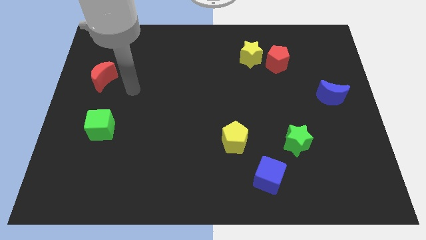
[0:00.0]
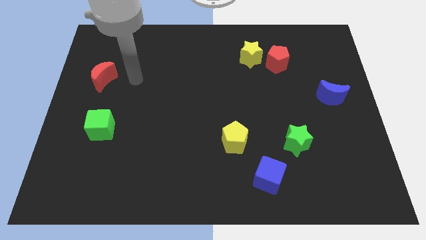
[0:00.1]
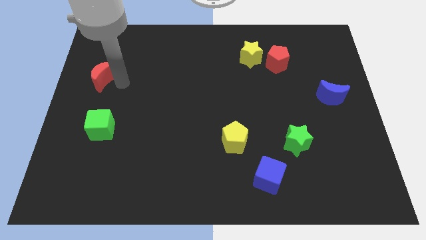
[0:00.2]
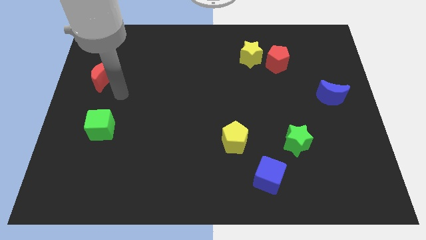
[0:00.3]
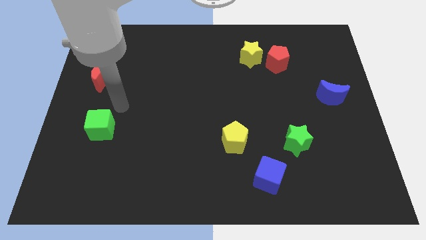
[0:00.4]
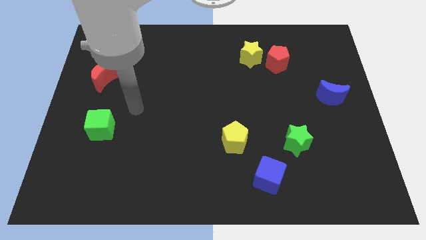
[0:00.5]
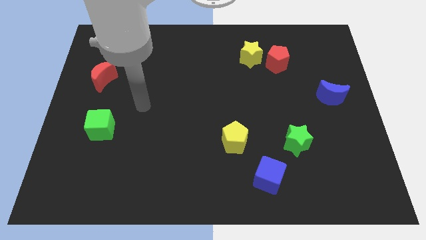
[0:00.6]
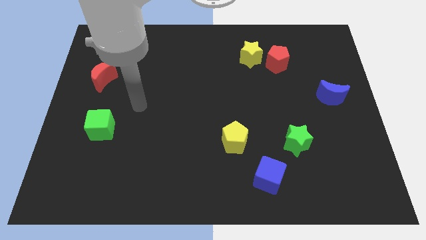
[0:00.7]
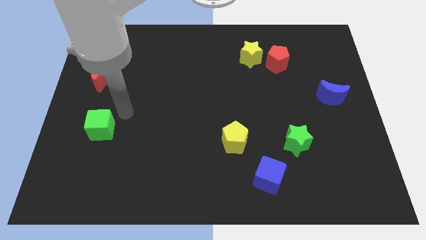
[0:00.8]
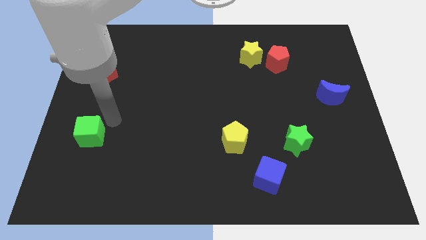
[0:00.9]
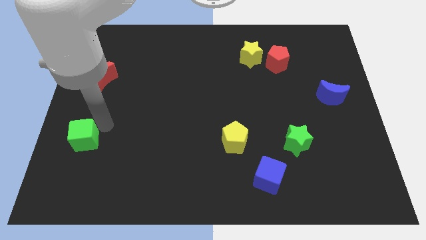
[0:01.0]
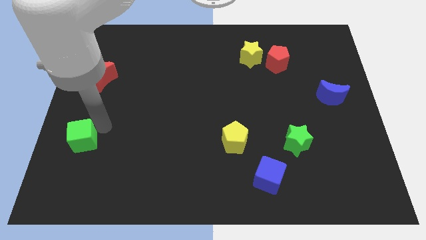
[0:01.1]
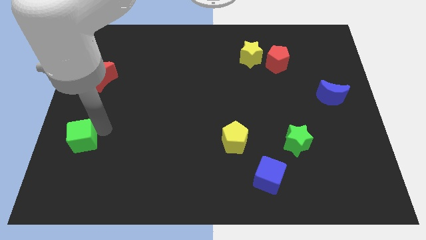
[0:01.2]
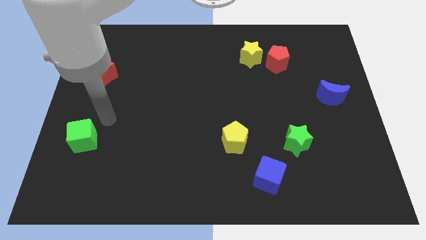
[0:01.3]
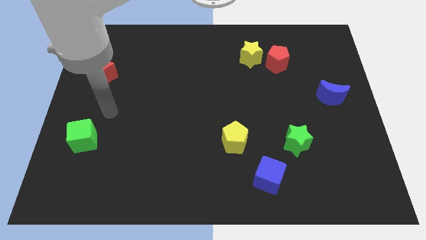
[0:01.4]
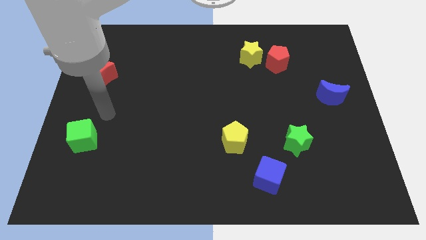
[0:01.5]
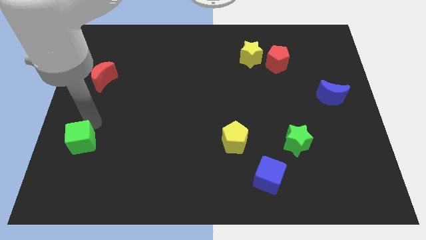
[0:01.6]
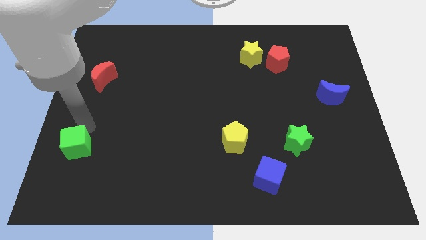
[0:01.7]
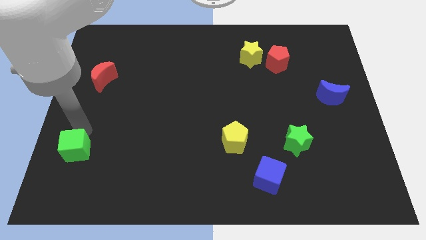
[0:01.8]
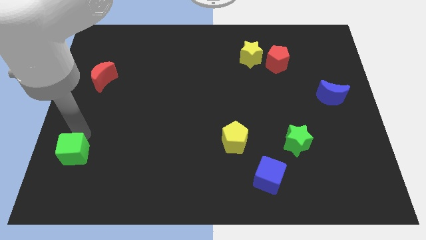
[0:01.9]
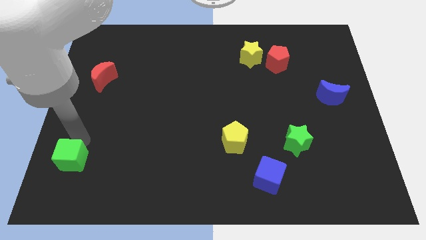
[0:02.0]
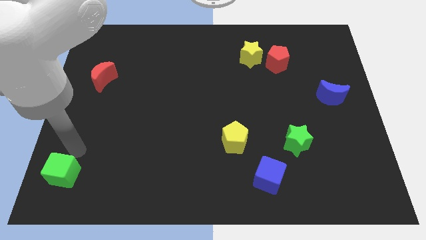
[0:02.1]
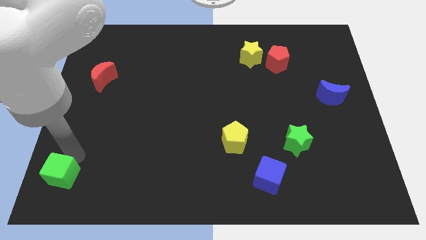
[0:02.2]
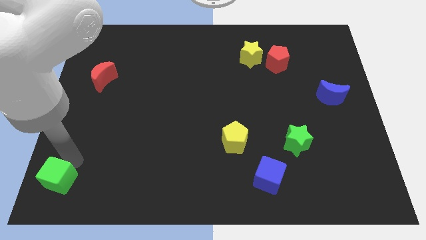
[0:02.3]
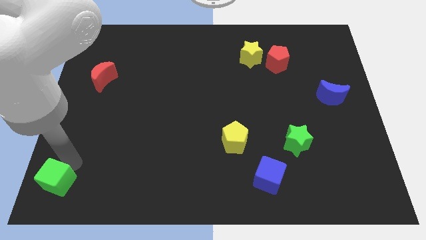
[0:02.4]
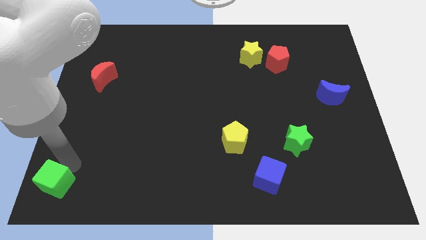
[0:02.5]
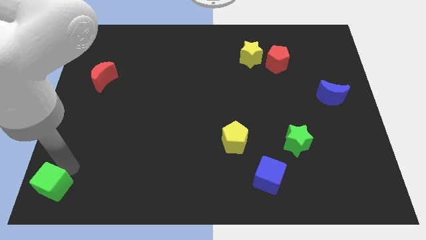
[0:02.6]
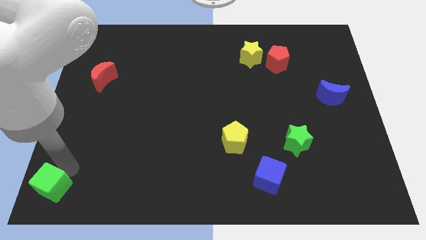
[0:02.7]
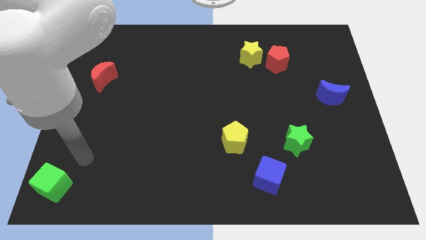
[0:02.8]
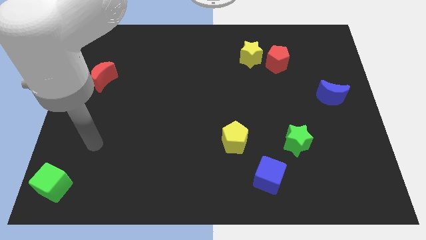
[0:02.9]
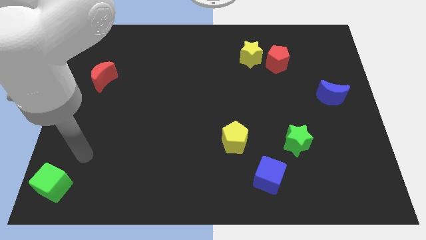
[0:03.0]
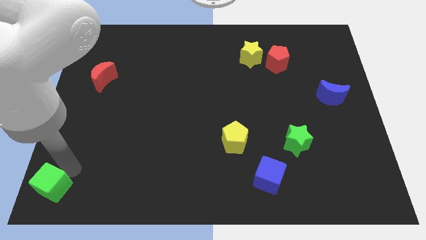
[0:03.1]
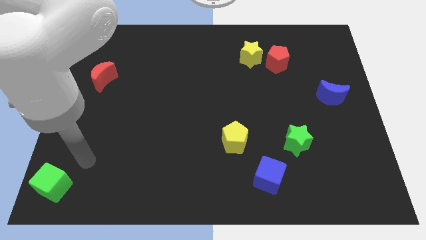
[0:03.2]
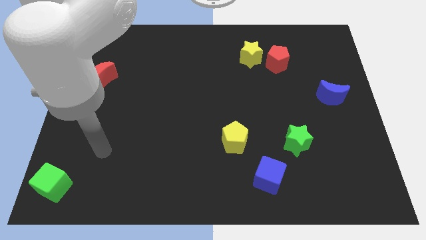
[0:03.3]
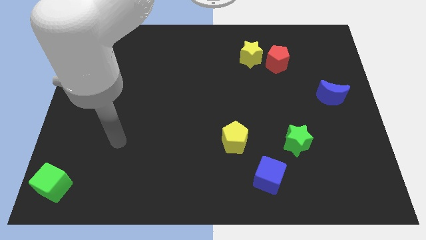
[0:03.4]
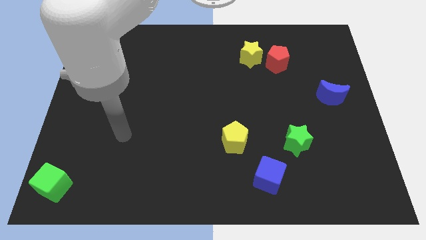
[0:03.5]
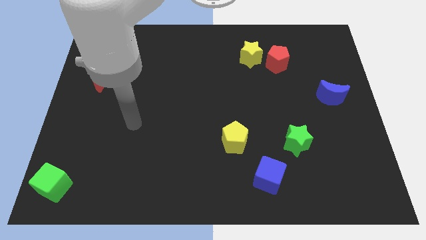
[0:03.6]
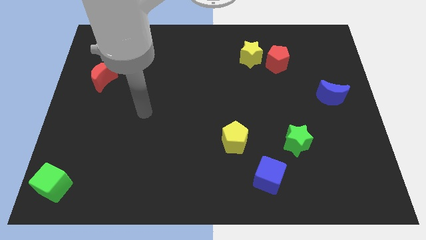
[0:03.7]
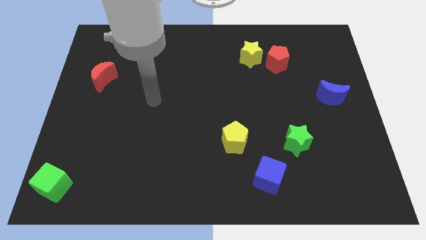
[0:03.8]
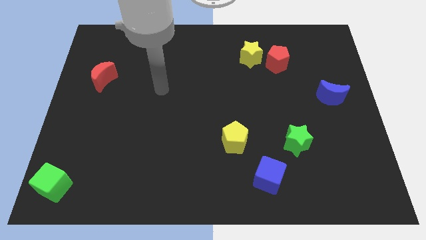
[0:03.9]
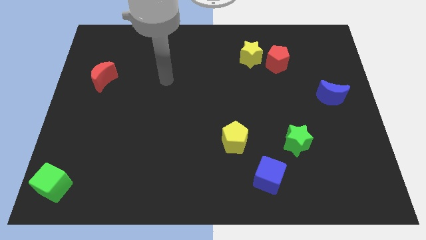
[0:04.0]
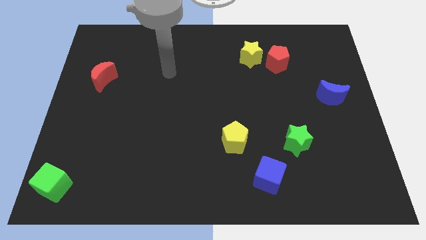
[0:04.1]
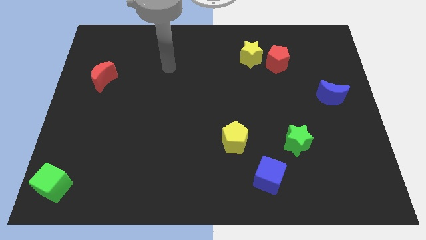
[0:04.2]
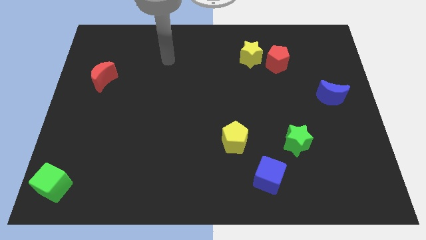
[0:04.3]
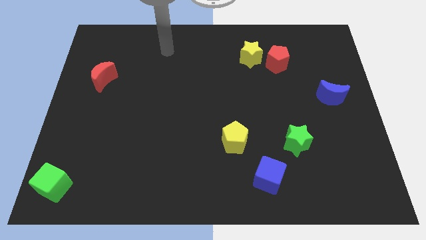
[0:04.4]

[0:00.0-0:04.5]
move the green cube to the bottom left corner

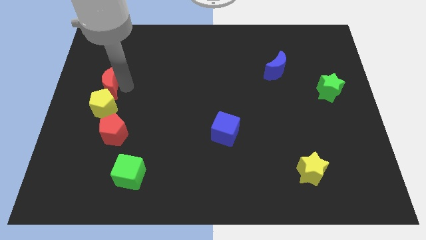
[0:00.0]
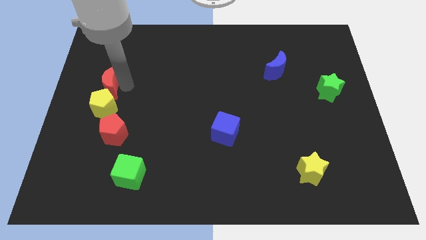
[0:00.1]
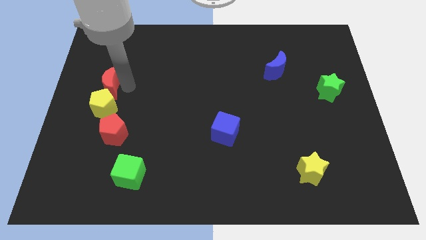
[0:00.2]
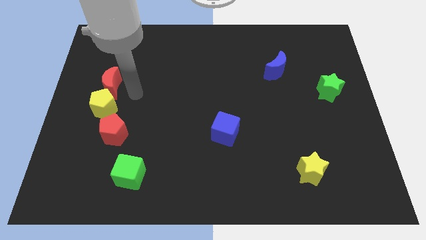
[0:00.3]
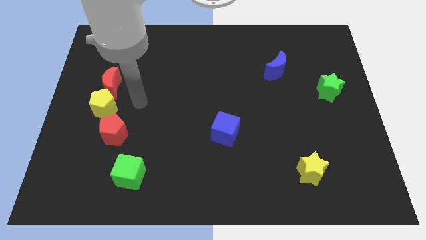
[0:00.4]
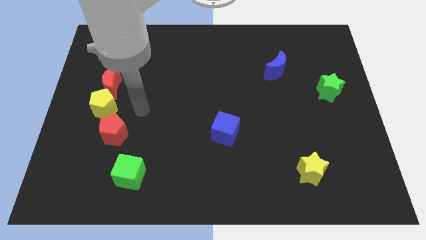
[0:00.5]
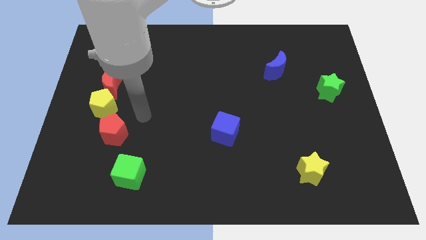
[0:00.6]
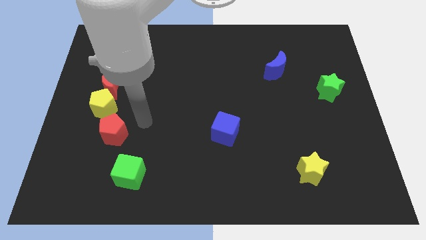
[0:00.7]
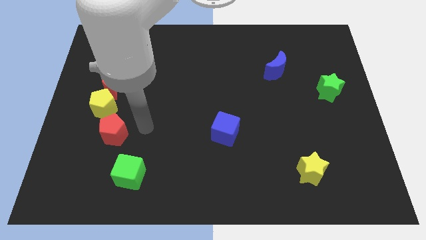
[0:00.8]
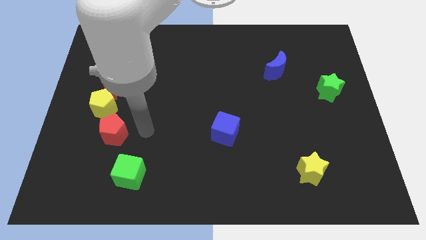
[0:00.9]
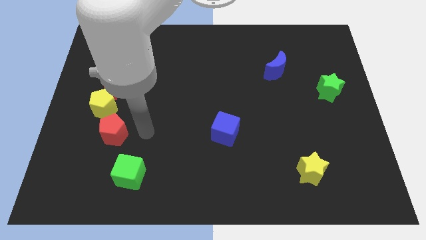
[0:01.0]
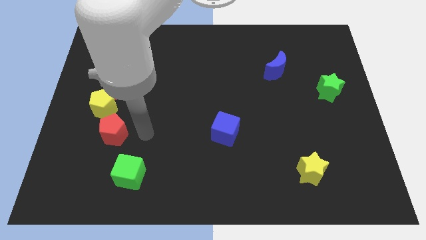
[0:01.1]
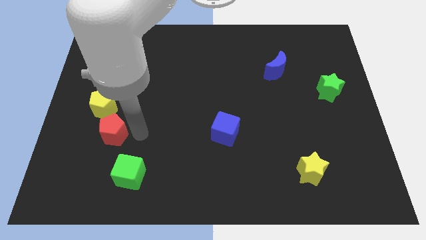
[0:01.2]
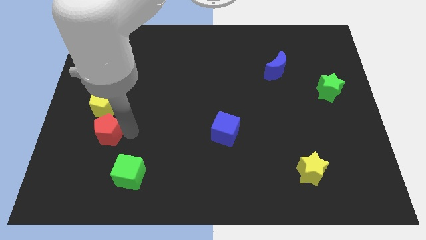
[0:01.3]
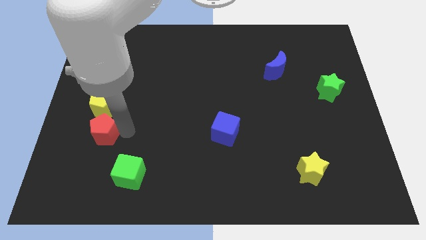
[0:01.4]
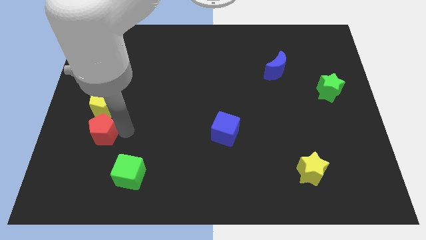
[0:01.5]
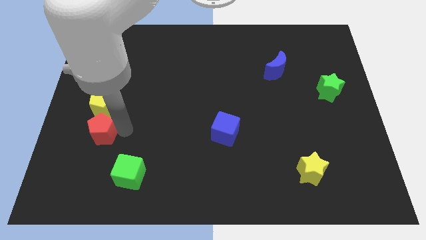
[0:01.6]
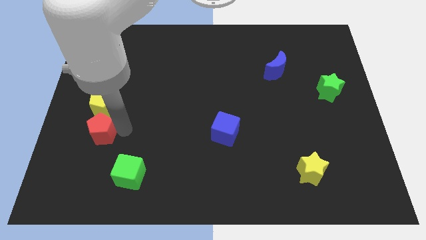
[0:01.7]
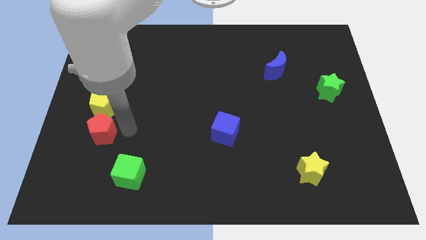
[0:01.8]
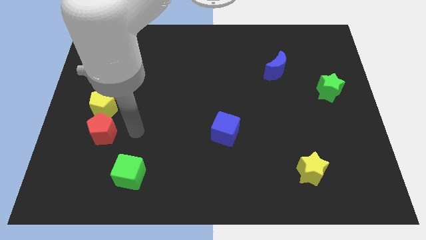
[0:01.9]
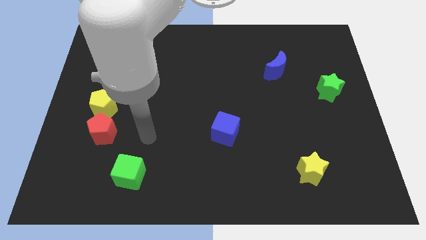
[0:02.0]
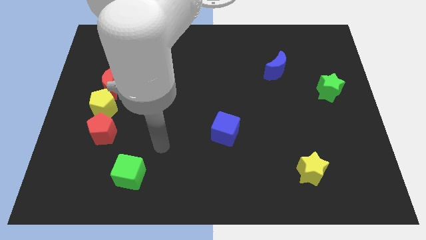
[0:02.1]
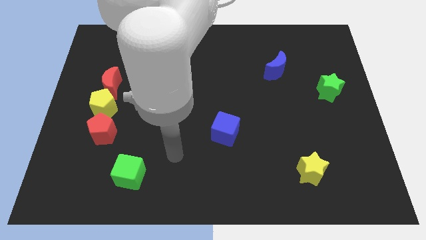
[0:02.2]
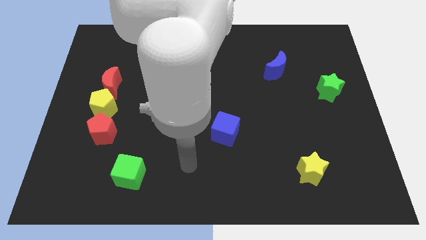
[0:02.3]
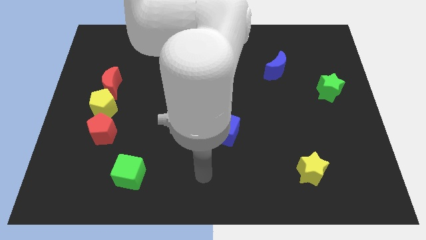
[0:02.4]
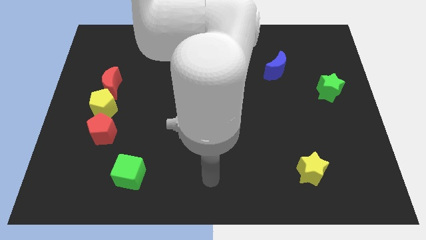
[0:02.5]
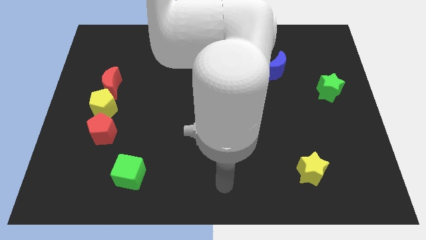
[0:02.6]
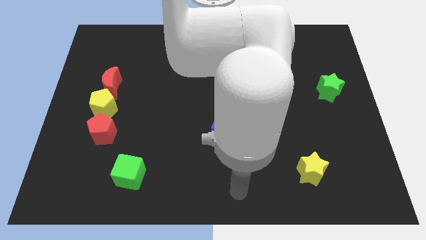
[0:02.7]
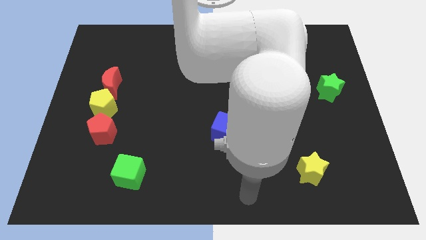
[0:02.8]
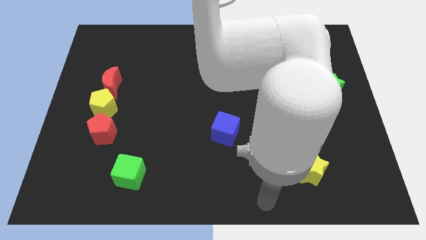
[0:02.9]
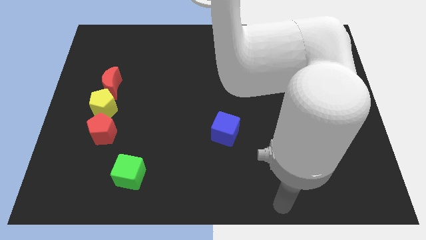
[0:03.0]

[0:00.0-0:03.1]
move the red pentagon slightly towards the bottom of the yellow pentagon

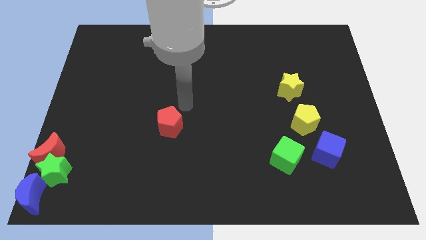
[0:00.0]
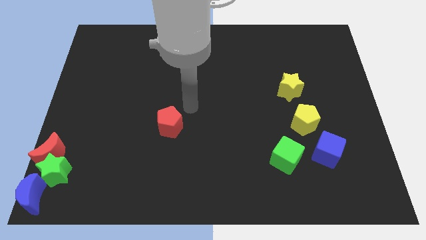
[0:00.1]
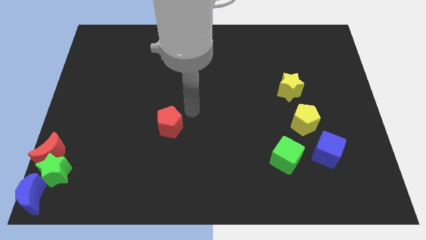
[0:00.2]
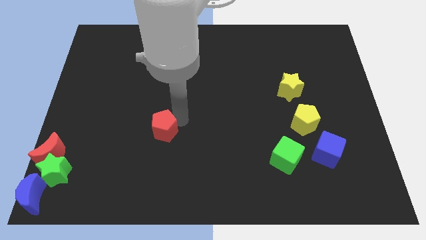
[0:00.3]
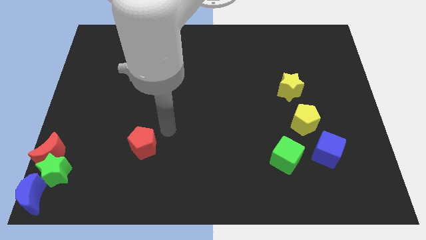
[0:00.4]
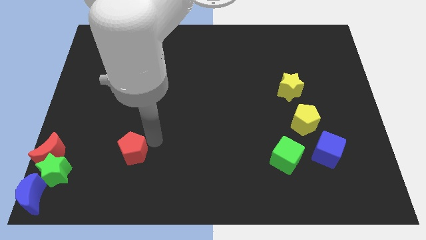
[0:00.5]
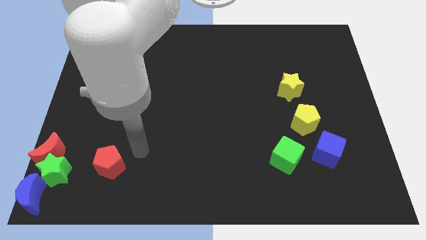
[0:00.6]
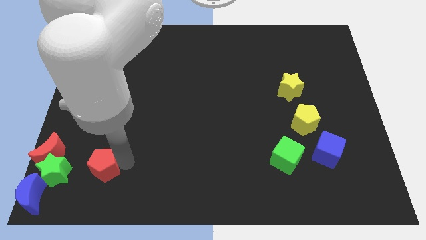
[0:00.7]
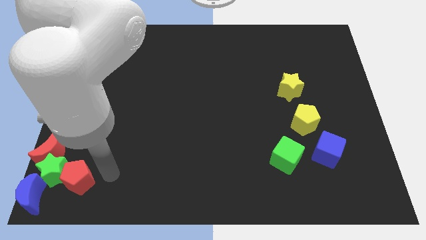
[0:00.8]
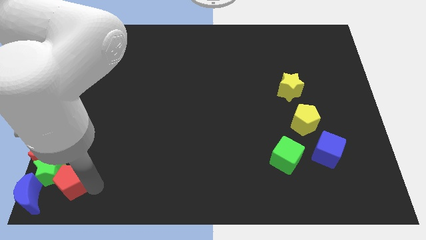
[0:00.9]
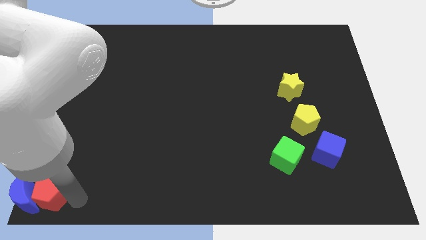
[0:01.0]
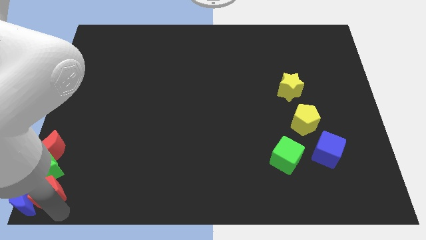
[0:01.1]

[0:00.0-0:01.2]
push red pentagon to the bottom left

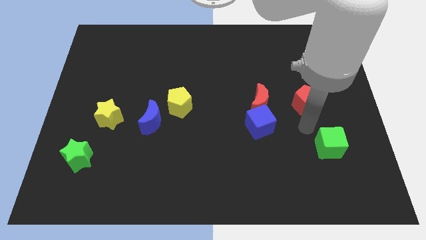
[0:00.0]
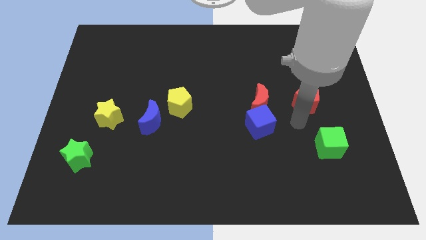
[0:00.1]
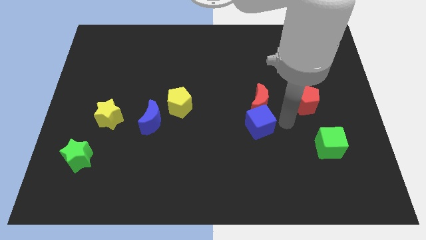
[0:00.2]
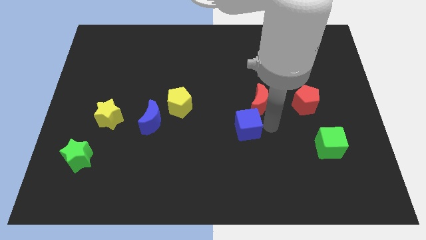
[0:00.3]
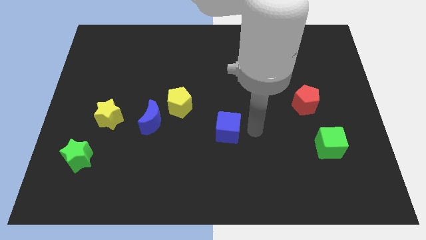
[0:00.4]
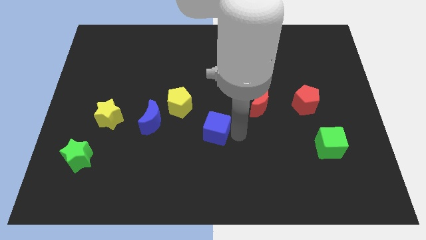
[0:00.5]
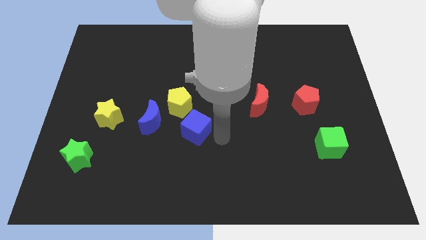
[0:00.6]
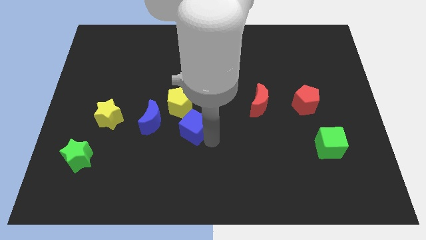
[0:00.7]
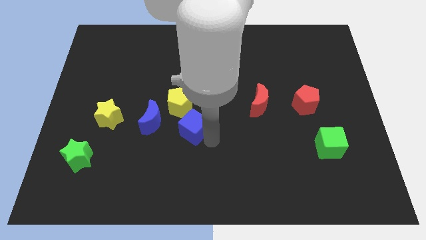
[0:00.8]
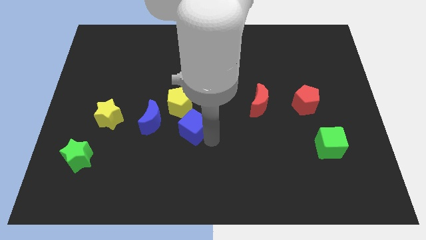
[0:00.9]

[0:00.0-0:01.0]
place the blue cube below the yellow pentagon
